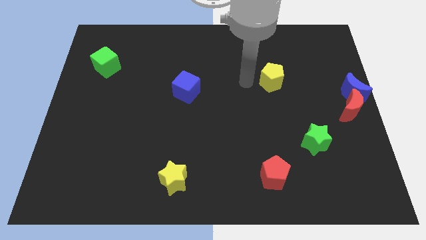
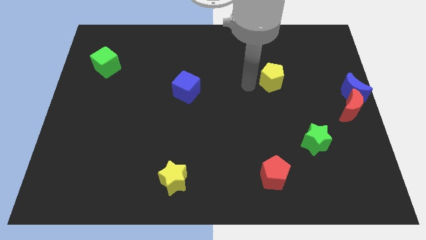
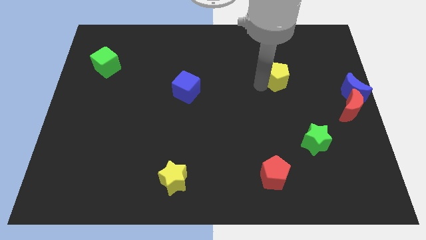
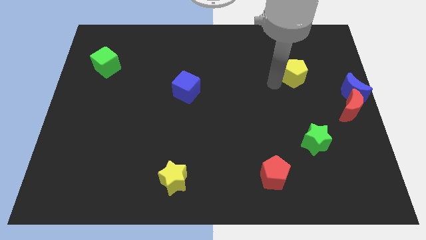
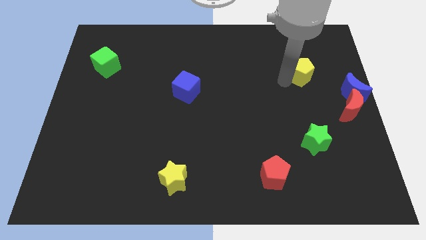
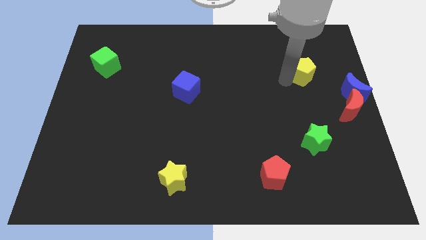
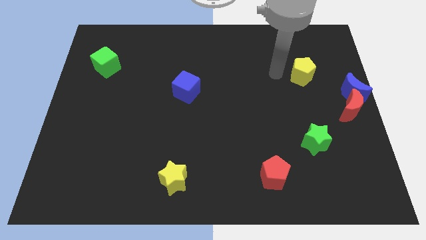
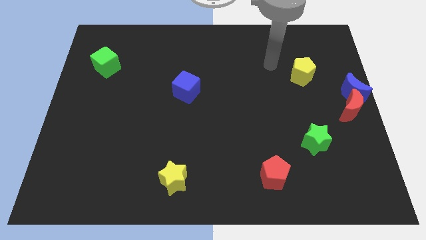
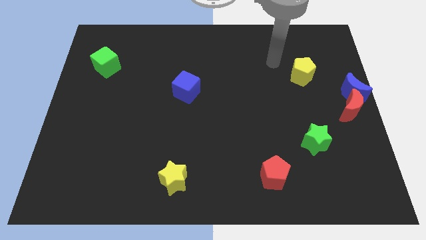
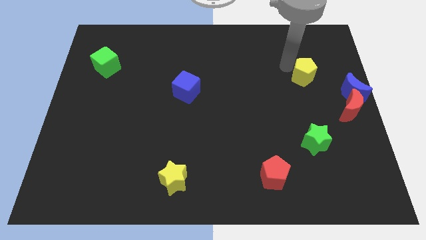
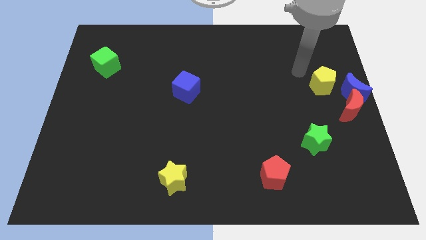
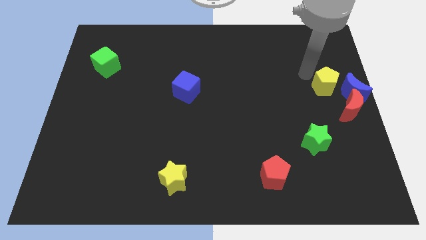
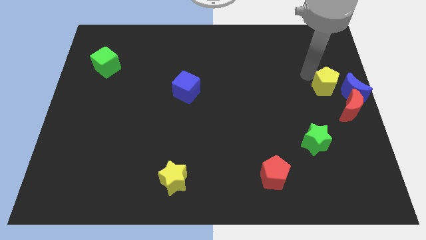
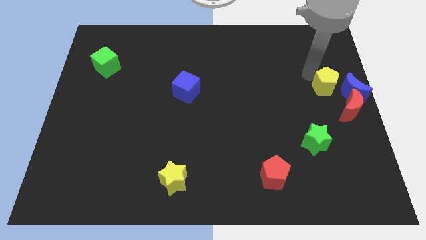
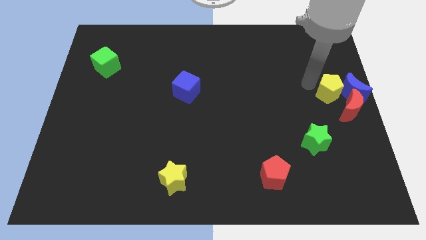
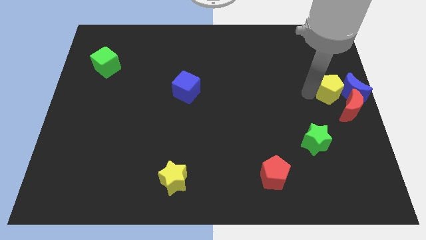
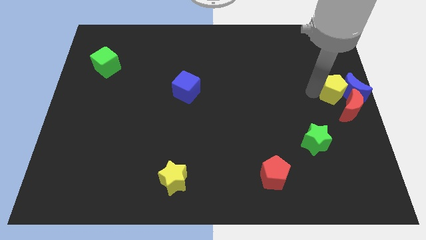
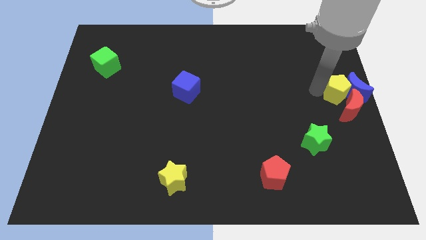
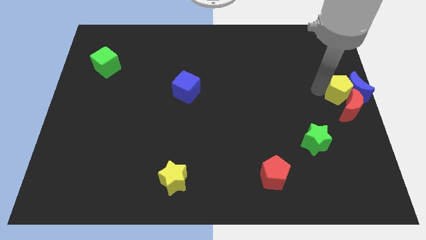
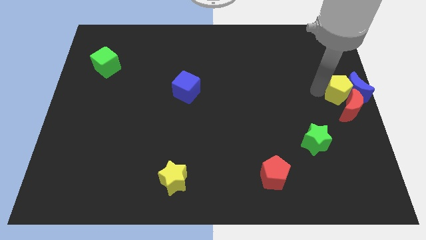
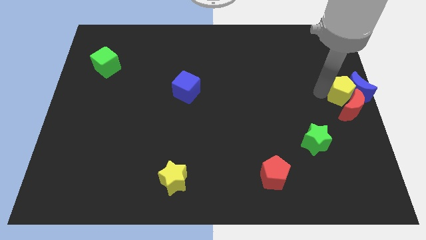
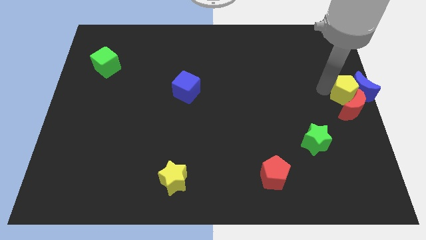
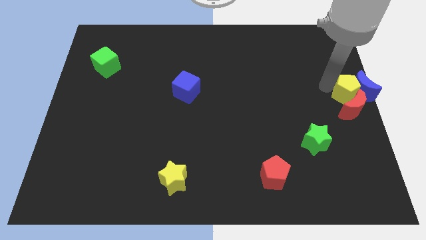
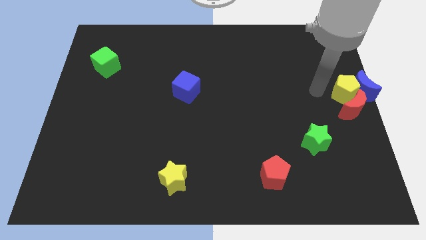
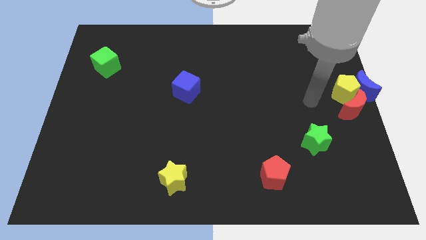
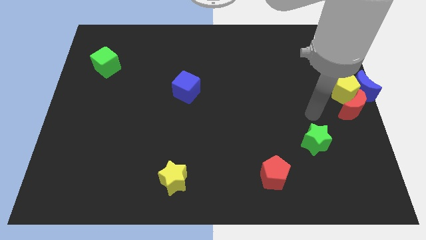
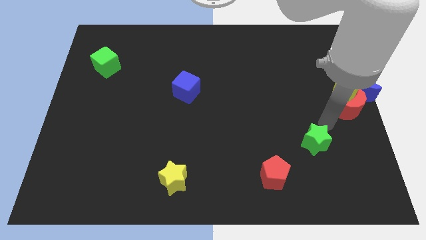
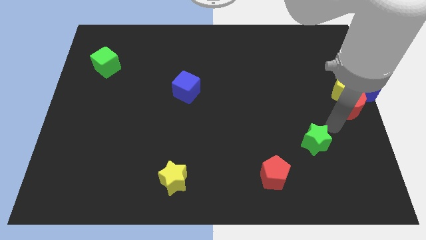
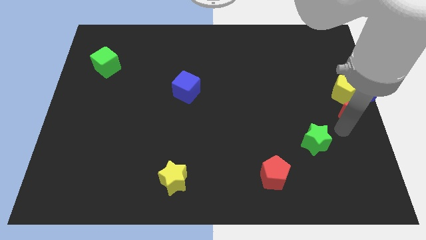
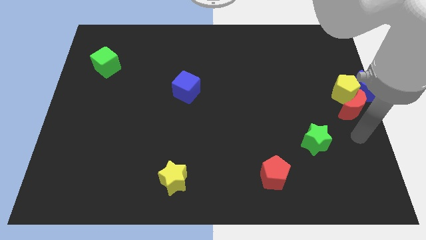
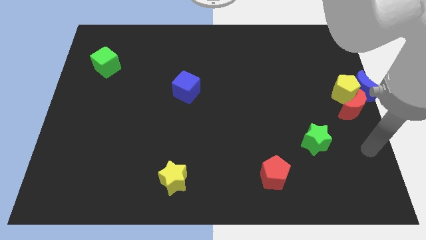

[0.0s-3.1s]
move the yellow pentagon towards the right center of the board

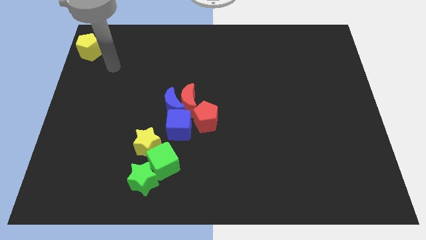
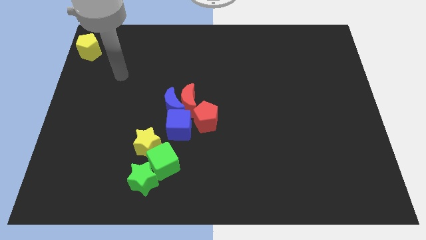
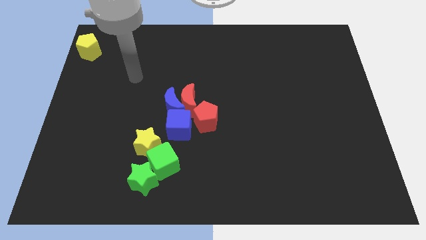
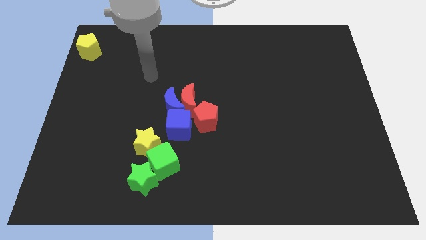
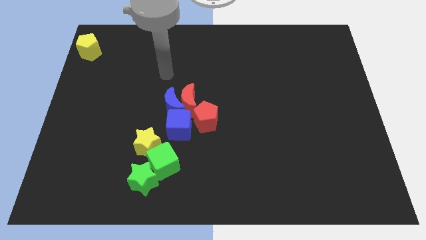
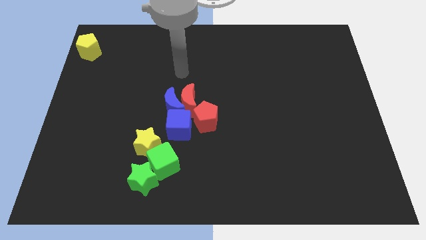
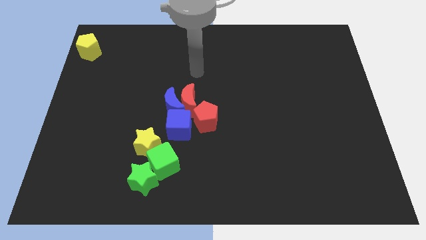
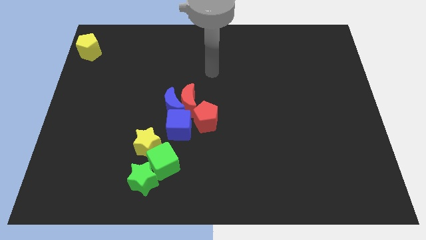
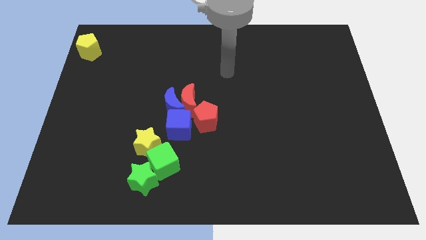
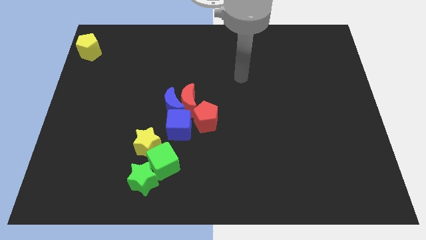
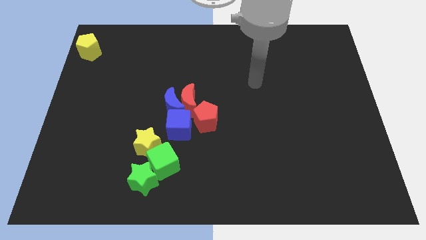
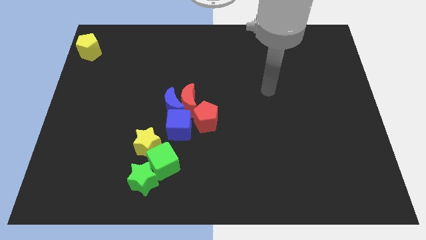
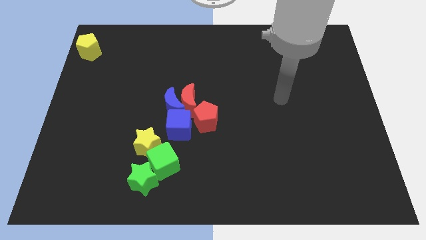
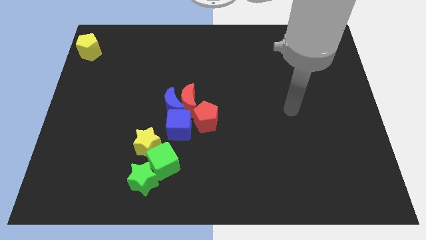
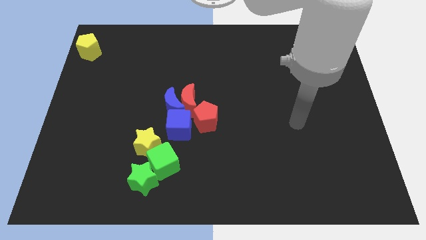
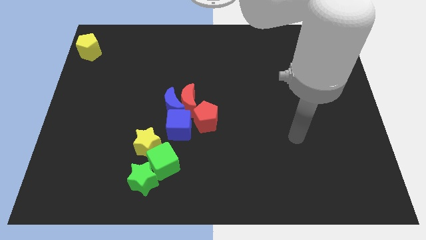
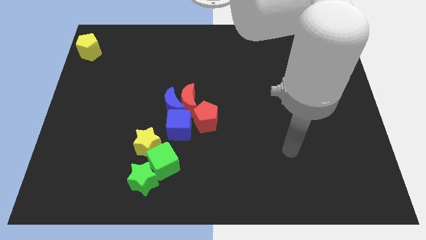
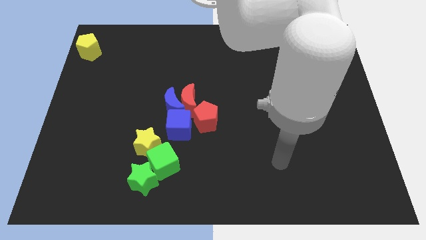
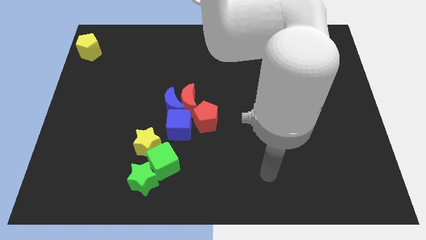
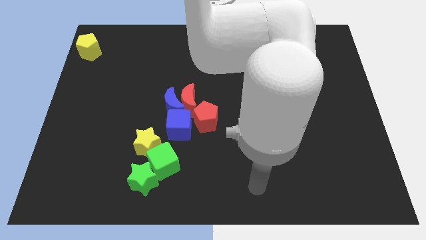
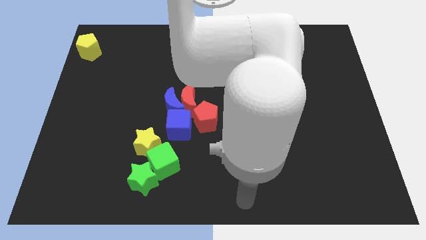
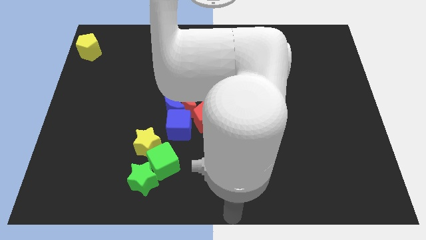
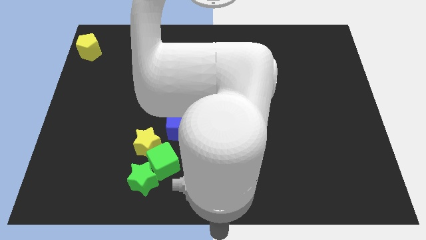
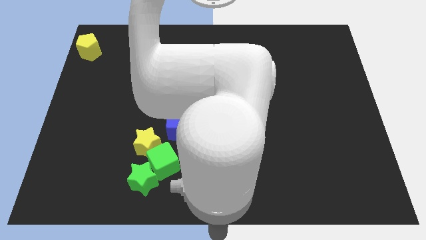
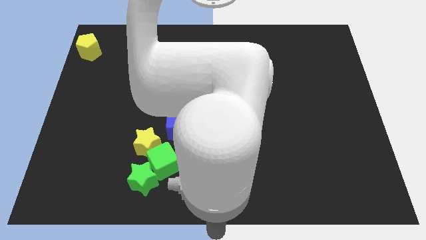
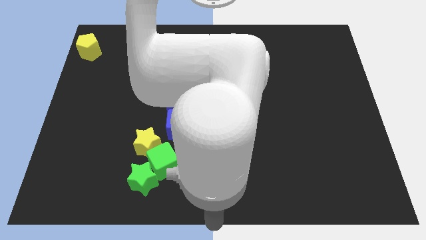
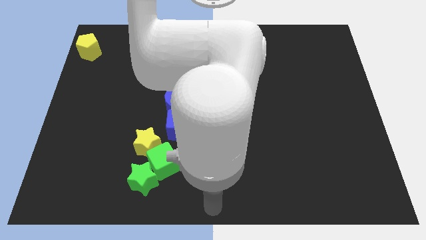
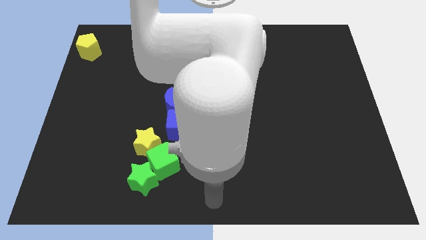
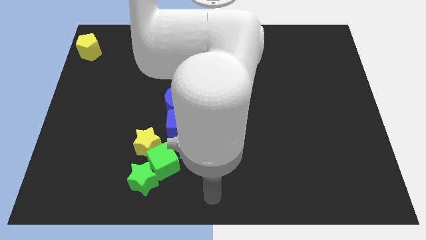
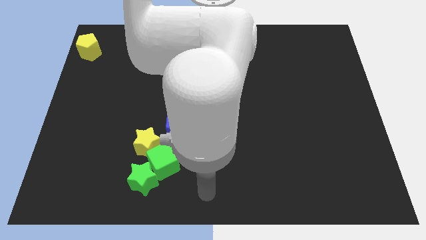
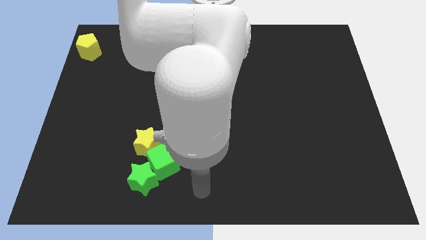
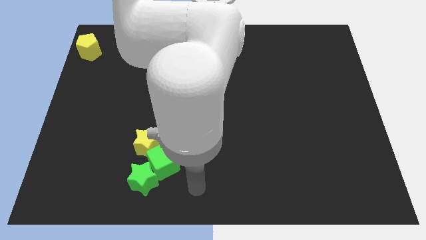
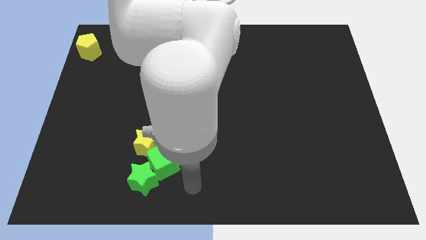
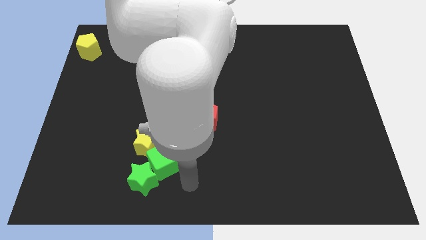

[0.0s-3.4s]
place your arm at the bottom center of the board

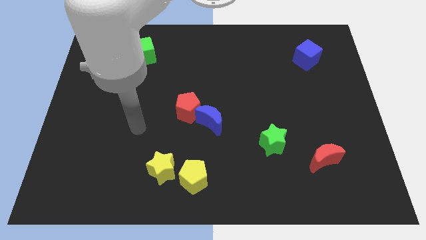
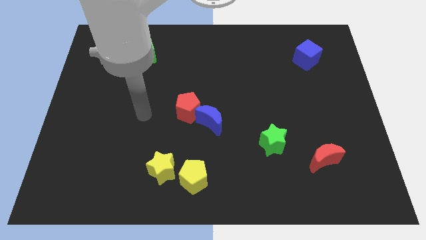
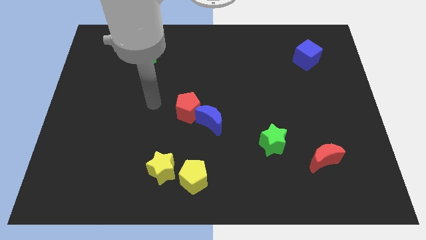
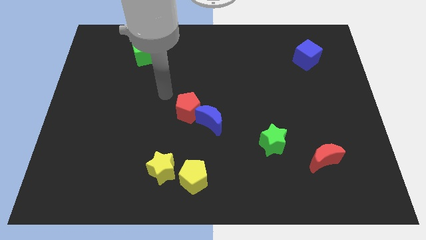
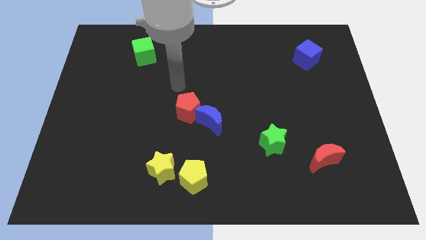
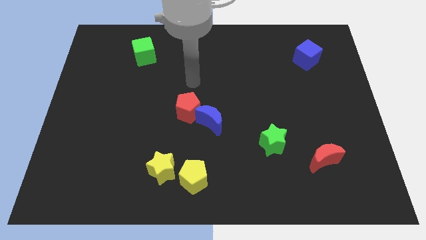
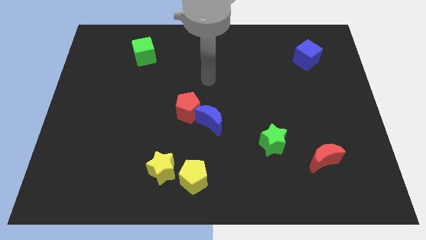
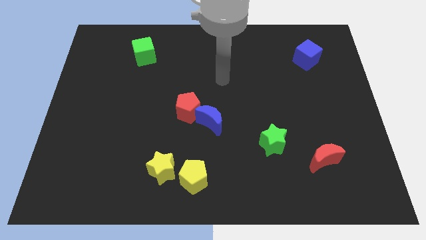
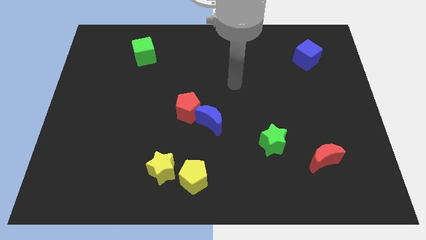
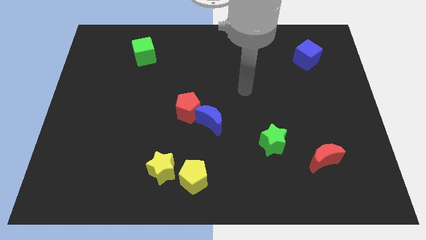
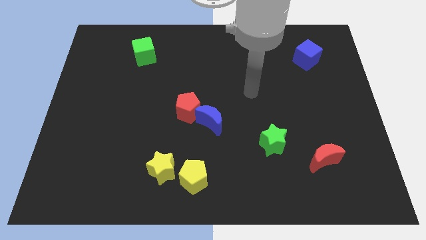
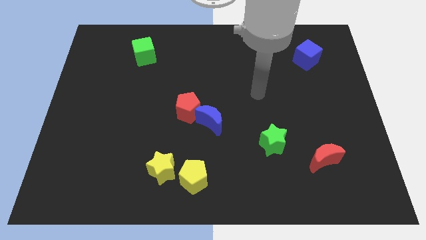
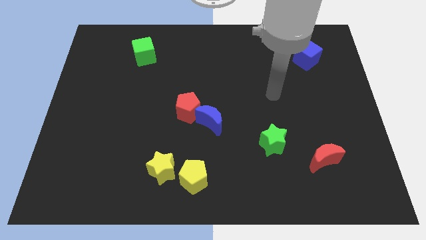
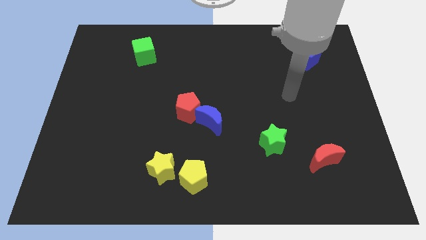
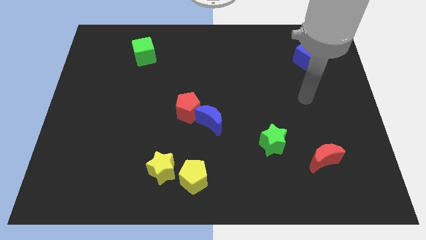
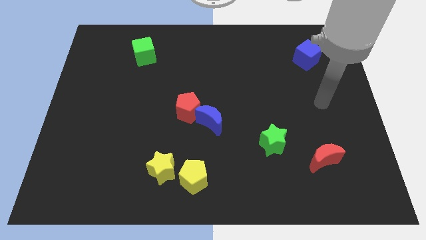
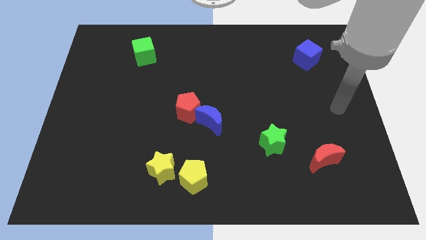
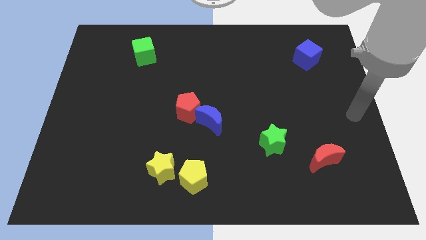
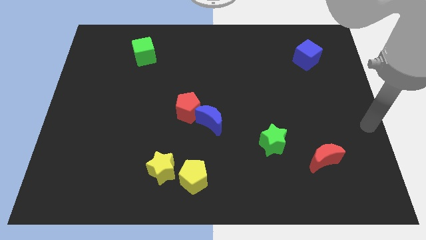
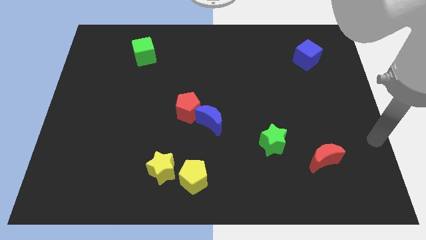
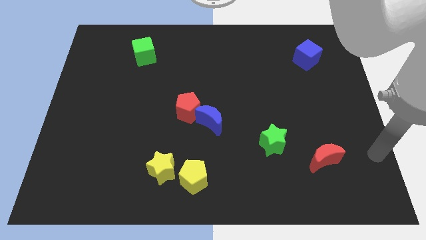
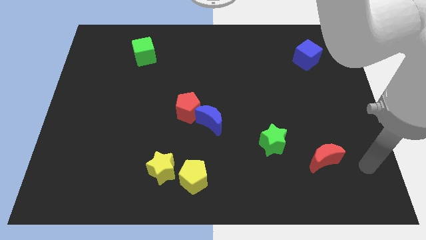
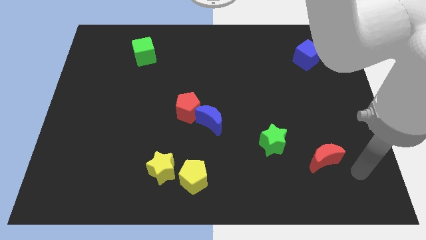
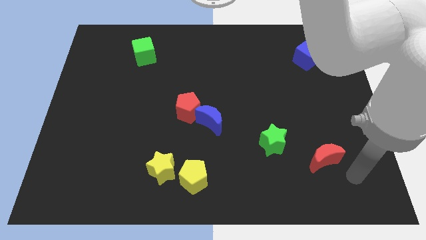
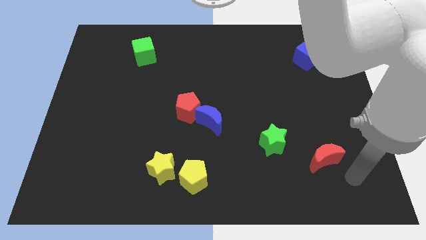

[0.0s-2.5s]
move the arm away from the yellow star

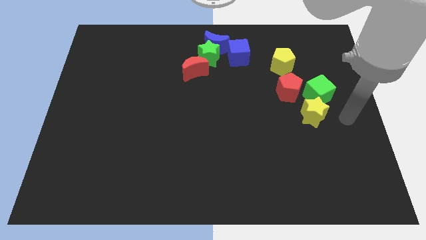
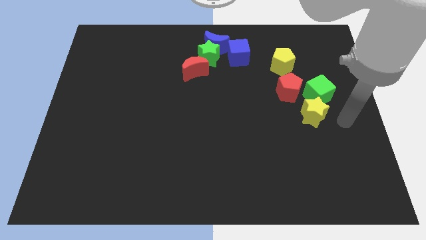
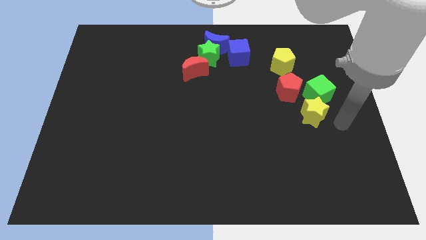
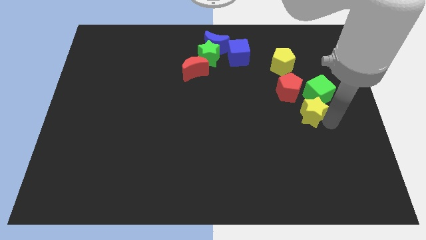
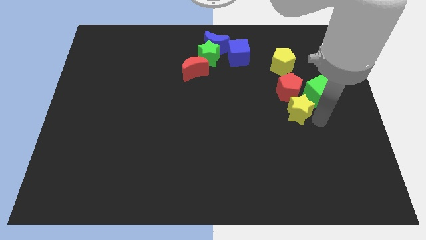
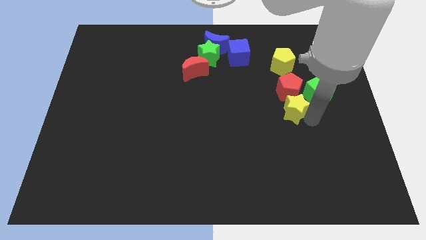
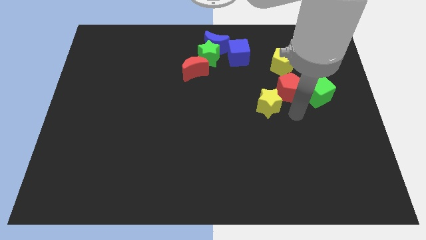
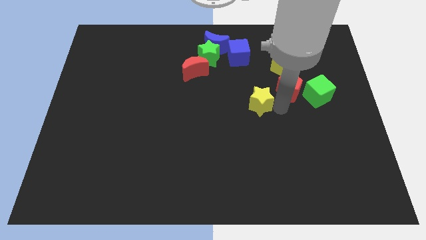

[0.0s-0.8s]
place the yellow star to the left of the red pentagon
